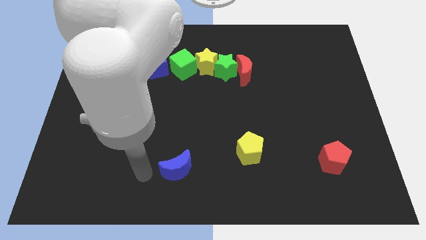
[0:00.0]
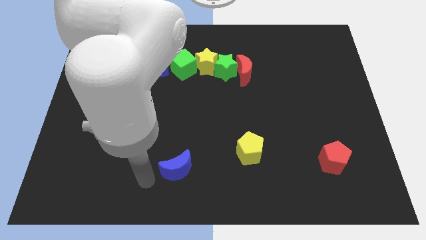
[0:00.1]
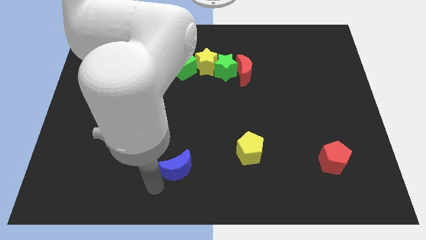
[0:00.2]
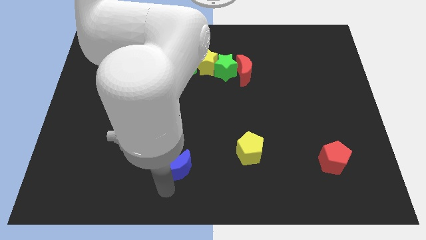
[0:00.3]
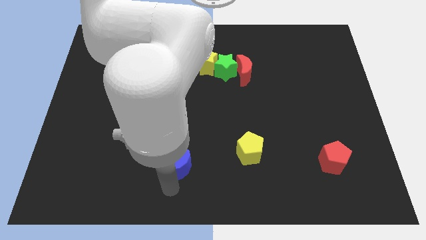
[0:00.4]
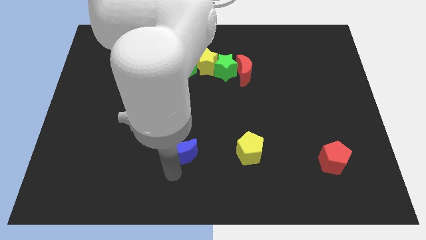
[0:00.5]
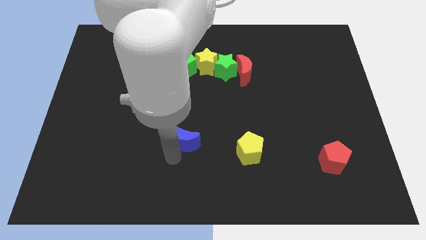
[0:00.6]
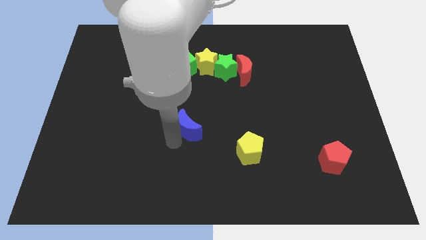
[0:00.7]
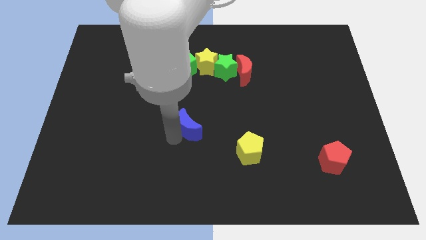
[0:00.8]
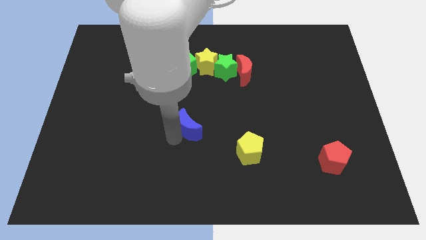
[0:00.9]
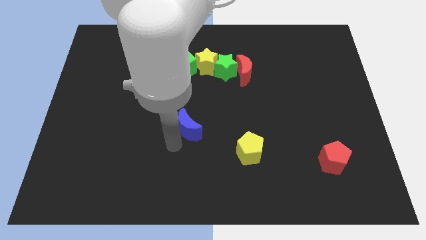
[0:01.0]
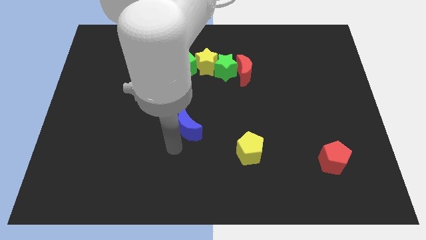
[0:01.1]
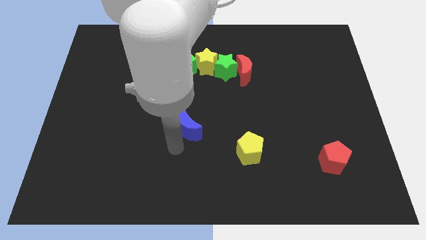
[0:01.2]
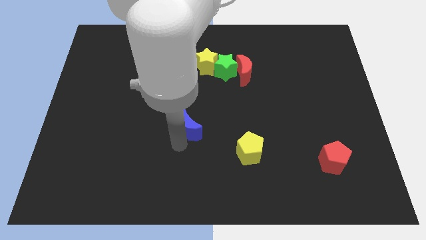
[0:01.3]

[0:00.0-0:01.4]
push the blue crescent towards the center of the board

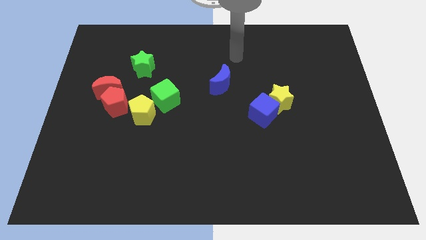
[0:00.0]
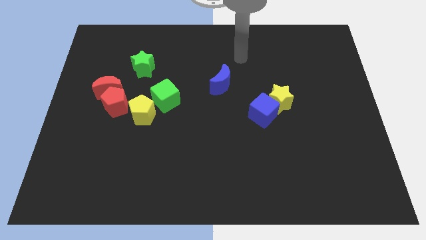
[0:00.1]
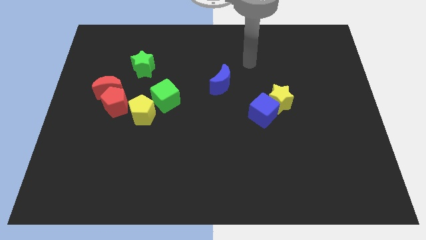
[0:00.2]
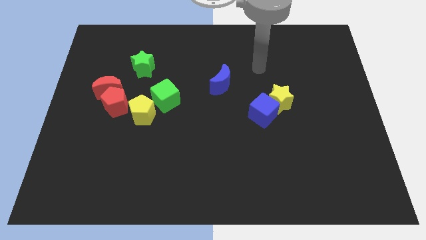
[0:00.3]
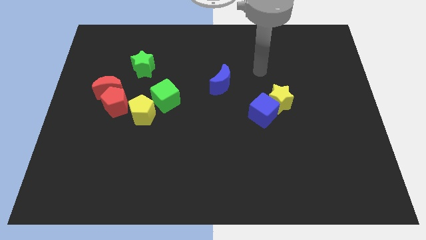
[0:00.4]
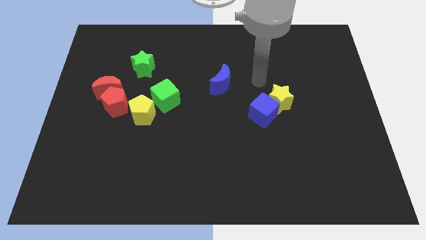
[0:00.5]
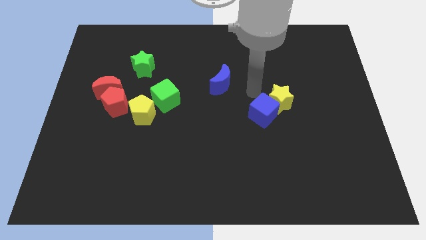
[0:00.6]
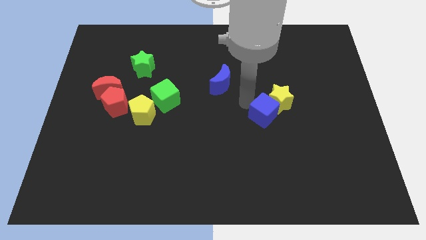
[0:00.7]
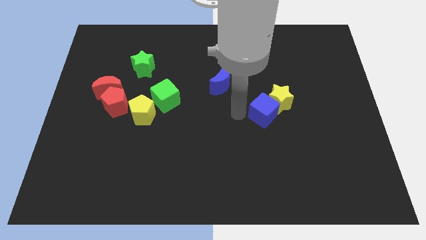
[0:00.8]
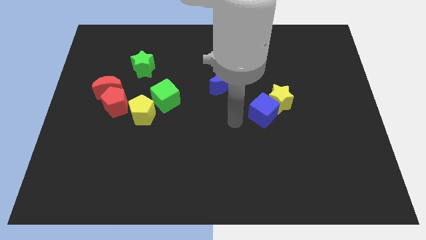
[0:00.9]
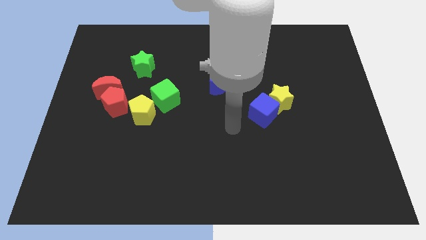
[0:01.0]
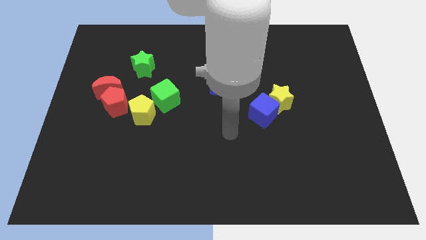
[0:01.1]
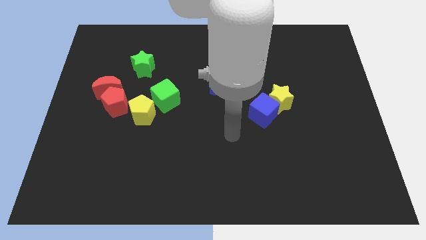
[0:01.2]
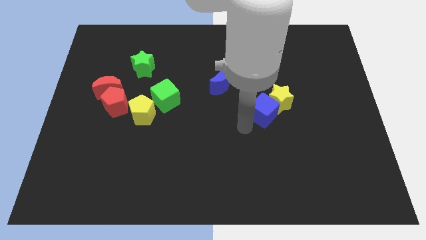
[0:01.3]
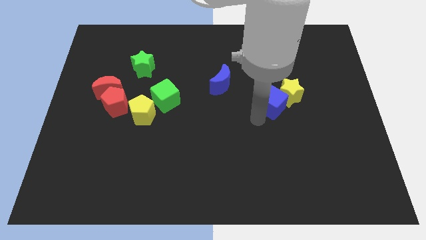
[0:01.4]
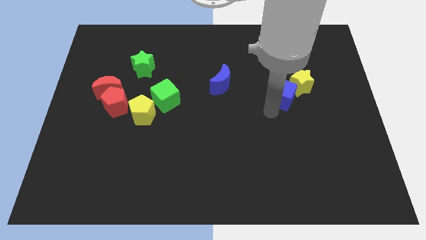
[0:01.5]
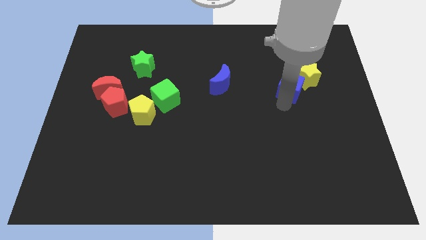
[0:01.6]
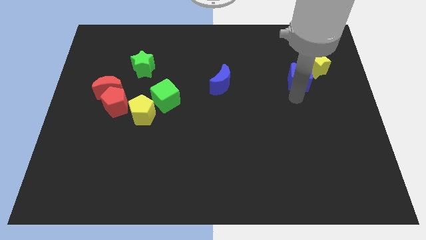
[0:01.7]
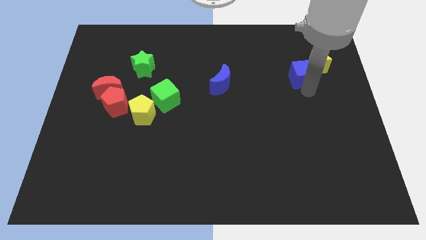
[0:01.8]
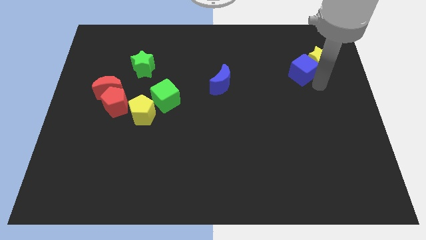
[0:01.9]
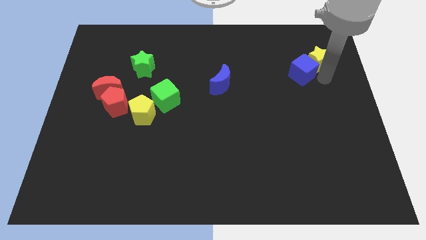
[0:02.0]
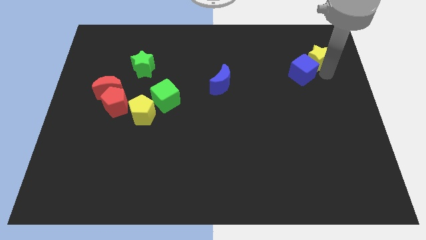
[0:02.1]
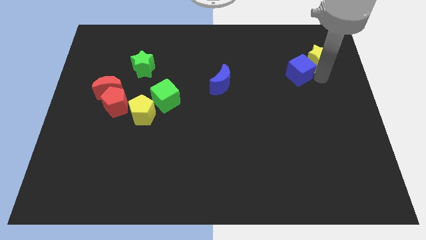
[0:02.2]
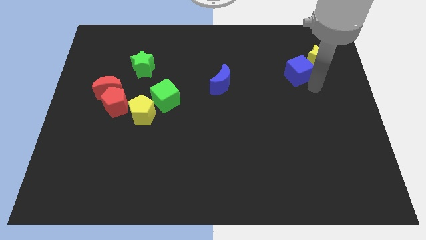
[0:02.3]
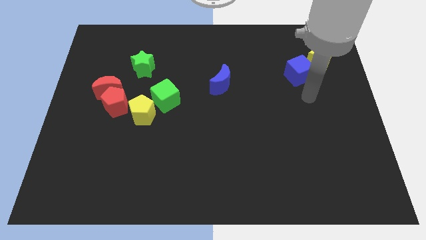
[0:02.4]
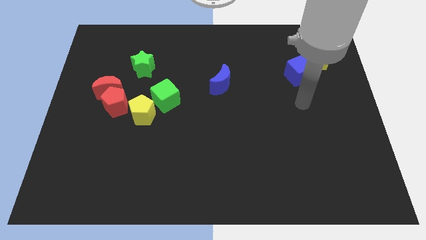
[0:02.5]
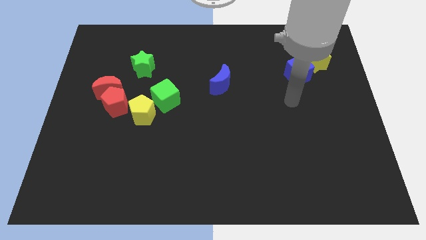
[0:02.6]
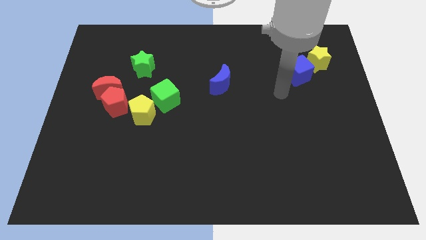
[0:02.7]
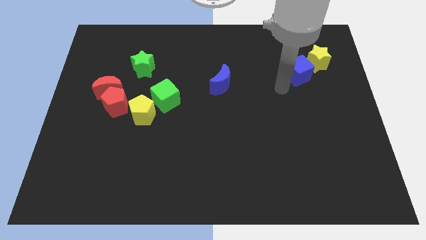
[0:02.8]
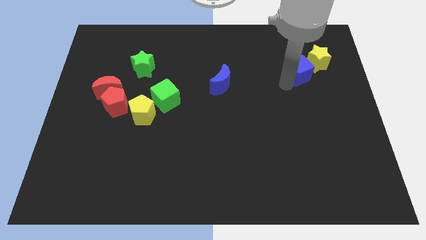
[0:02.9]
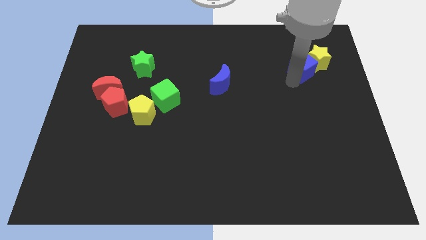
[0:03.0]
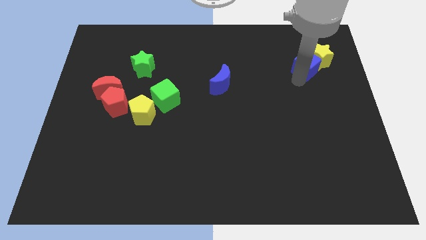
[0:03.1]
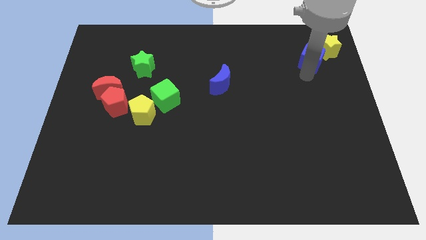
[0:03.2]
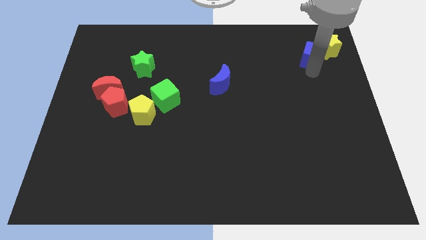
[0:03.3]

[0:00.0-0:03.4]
push the blue cube and yellow star to the top right corner

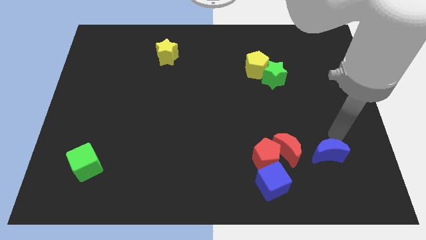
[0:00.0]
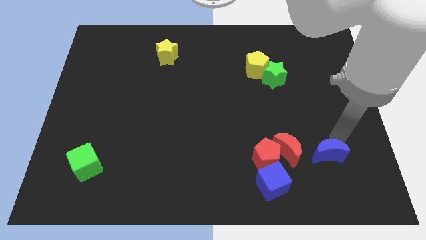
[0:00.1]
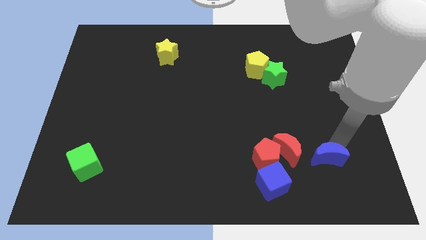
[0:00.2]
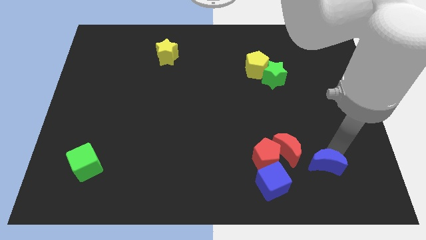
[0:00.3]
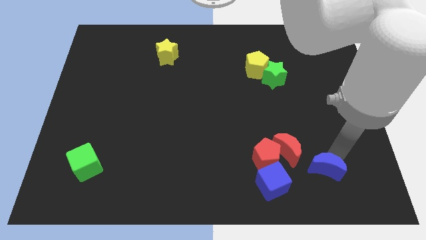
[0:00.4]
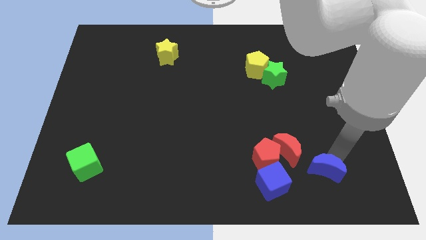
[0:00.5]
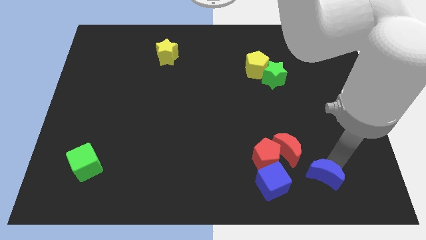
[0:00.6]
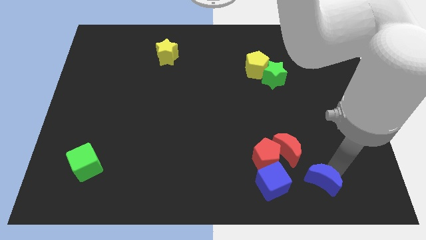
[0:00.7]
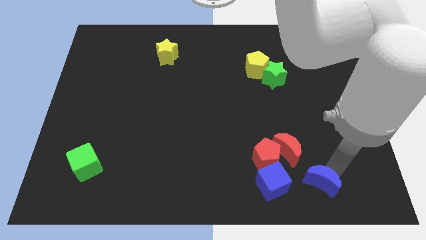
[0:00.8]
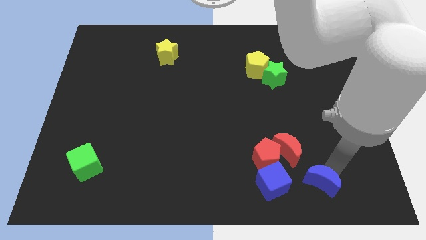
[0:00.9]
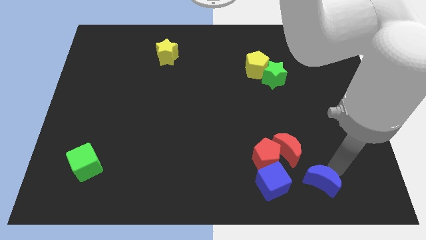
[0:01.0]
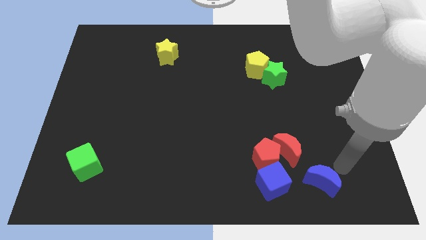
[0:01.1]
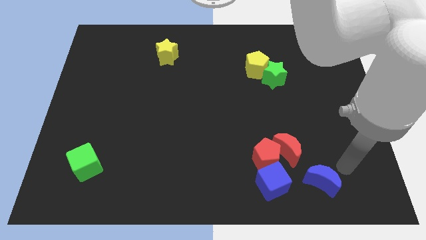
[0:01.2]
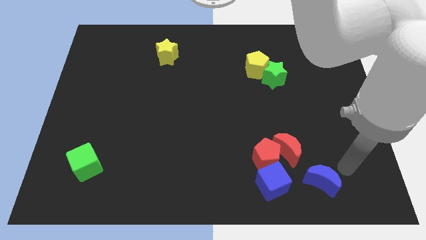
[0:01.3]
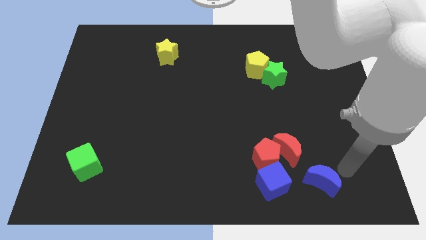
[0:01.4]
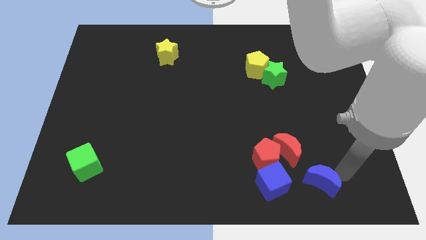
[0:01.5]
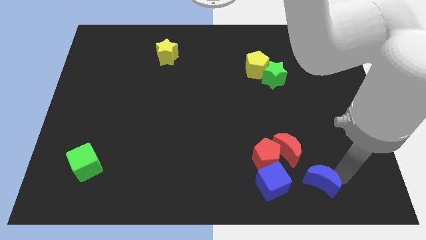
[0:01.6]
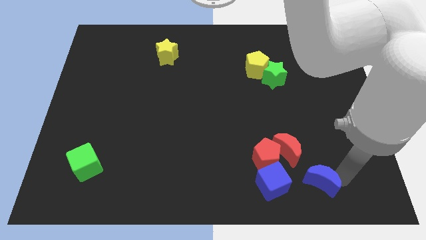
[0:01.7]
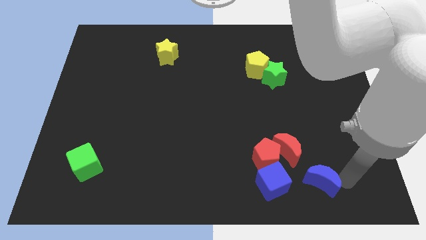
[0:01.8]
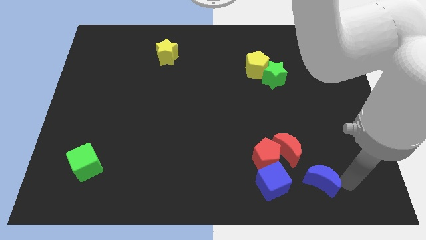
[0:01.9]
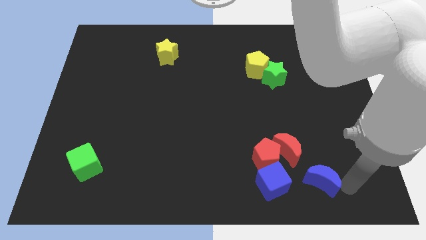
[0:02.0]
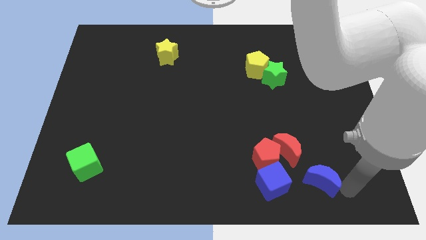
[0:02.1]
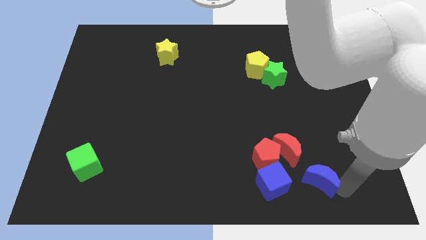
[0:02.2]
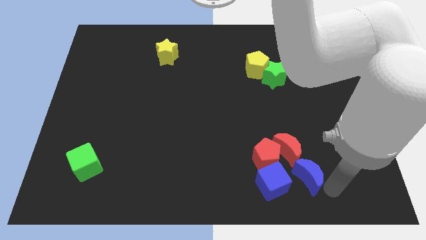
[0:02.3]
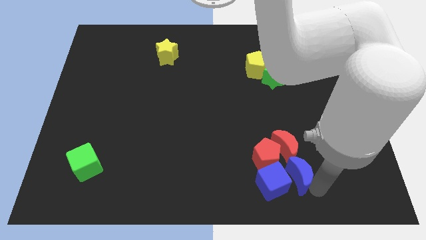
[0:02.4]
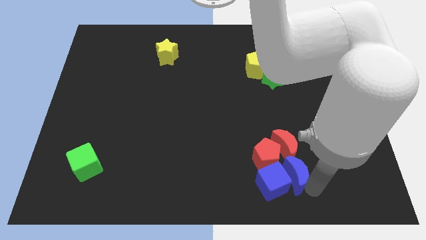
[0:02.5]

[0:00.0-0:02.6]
place the blue moon into the blue cube to the right

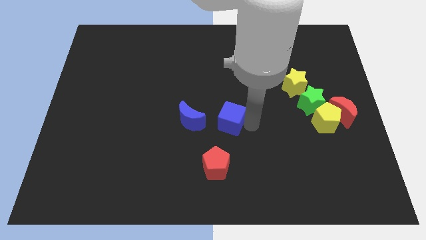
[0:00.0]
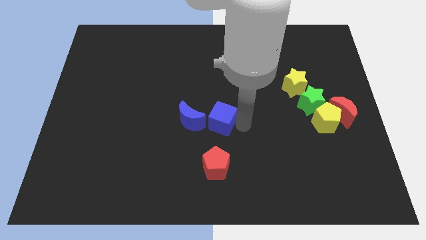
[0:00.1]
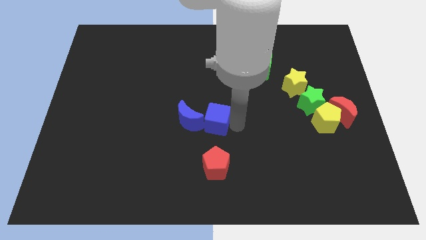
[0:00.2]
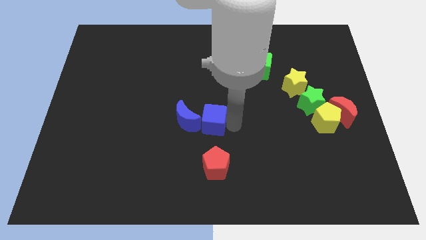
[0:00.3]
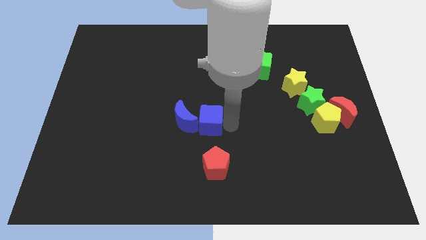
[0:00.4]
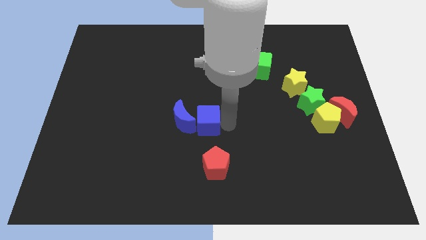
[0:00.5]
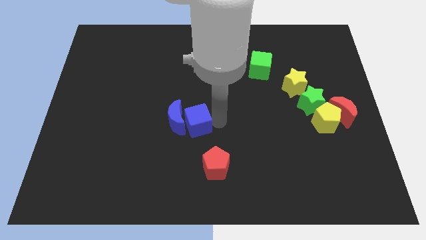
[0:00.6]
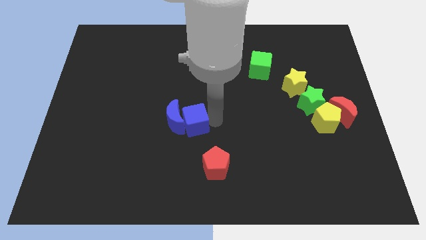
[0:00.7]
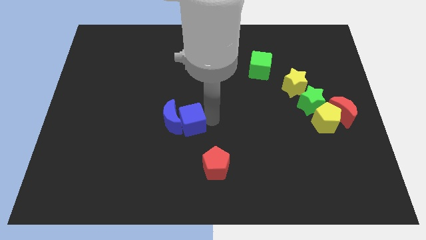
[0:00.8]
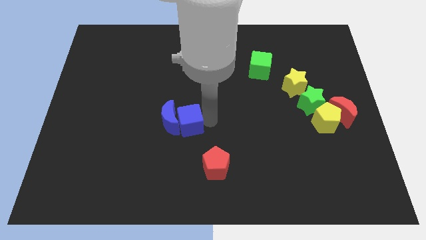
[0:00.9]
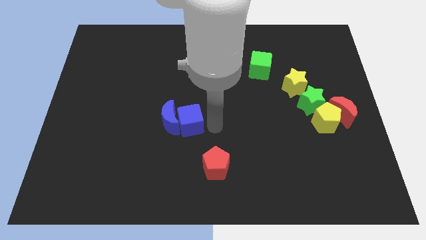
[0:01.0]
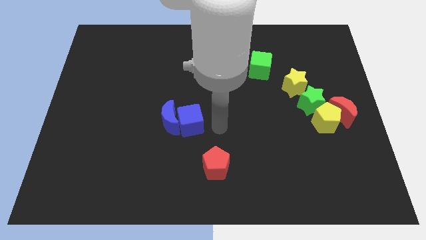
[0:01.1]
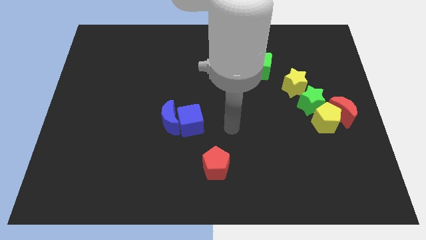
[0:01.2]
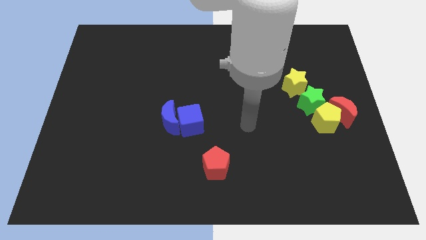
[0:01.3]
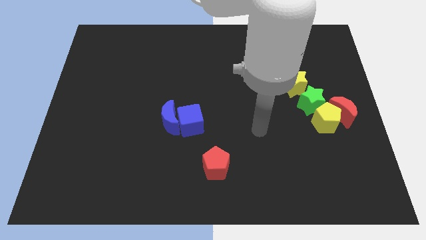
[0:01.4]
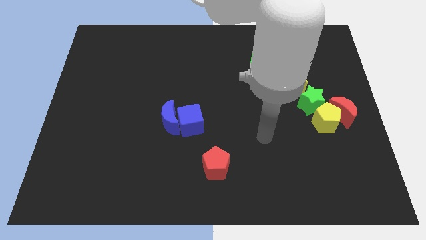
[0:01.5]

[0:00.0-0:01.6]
move the blue blocks to the left of the board
